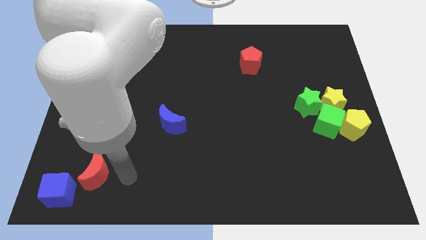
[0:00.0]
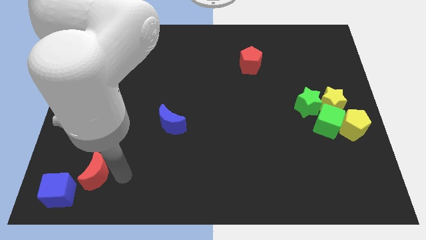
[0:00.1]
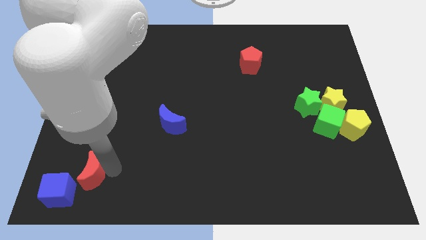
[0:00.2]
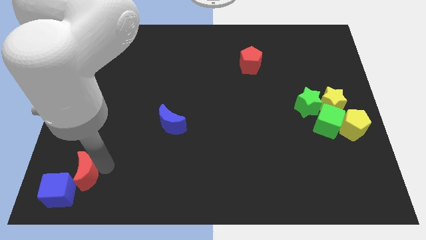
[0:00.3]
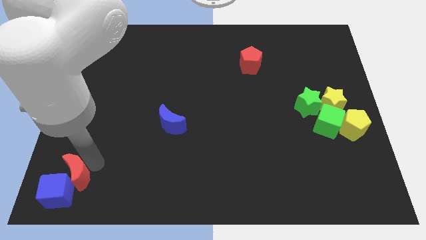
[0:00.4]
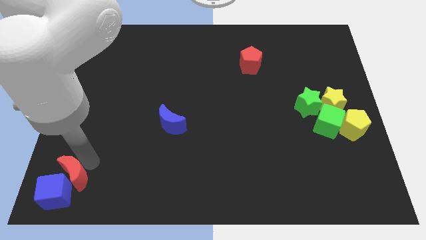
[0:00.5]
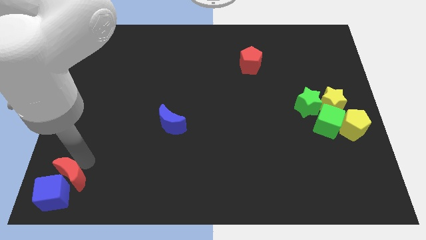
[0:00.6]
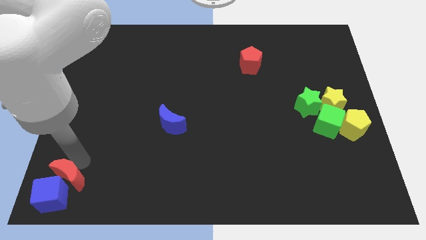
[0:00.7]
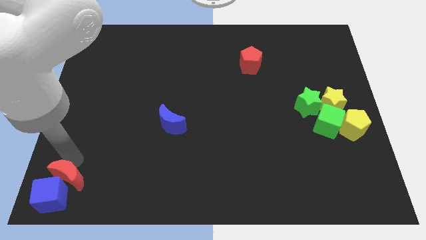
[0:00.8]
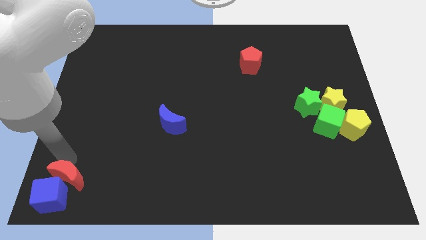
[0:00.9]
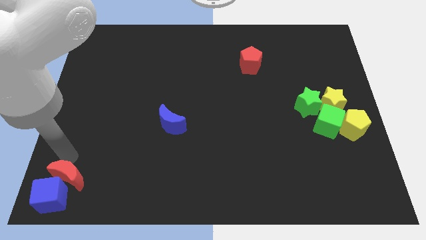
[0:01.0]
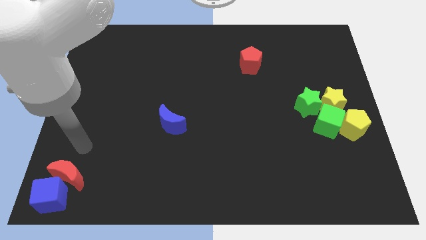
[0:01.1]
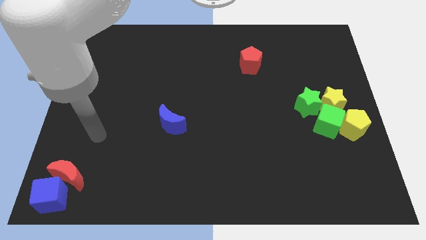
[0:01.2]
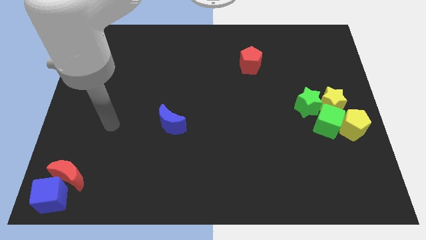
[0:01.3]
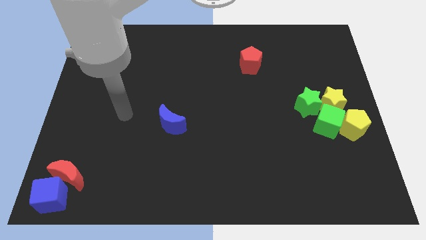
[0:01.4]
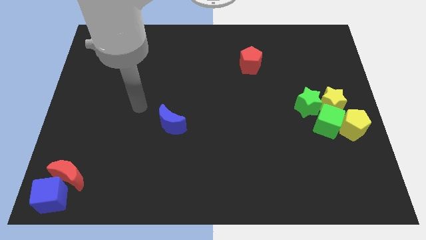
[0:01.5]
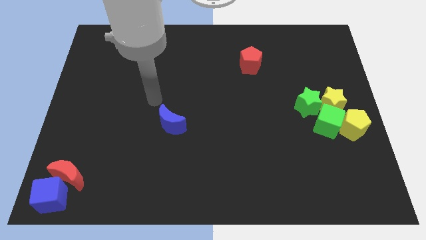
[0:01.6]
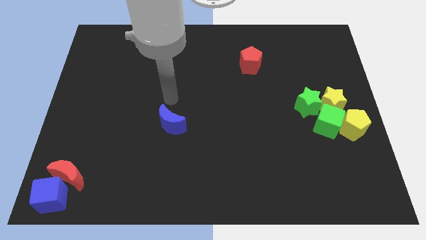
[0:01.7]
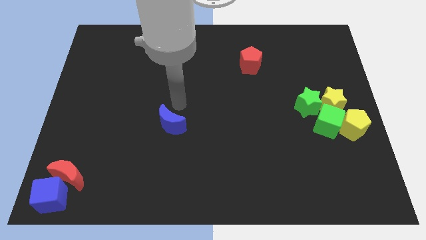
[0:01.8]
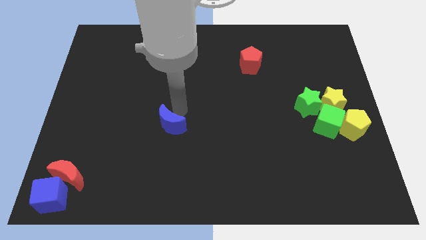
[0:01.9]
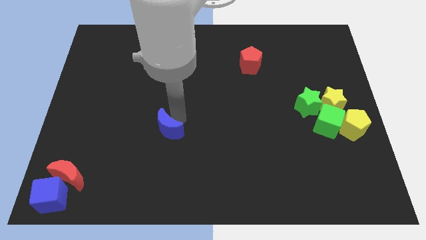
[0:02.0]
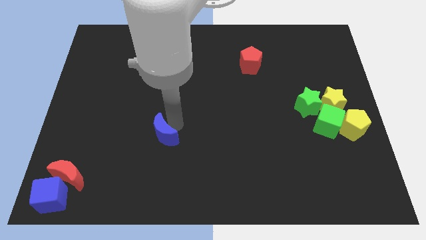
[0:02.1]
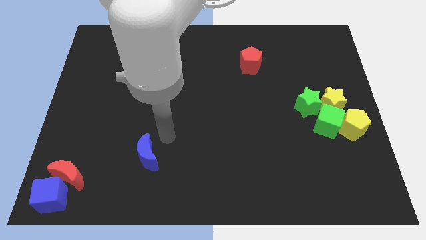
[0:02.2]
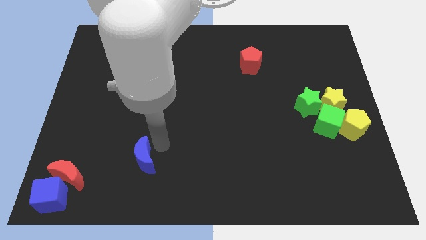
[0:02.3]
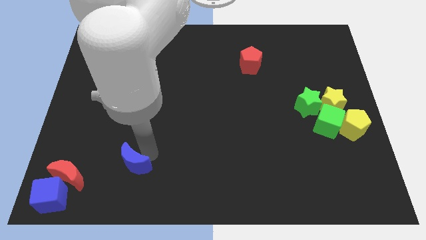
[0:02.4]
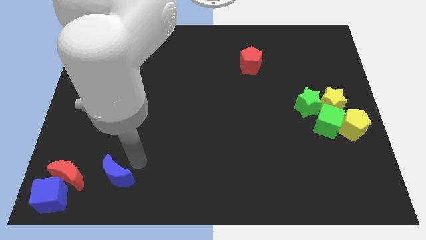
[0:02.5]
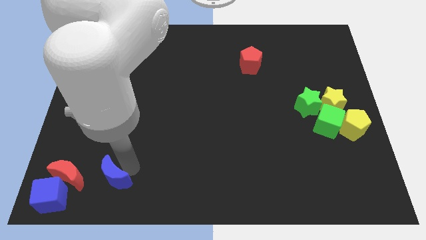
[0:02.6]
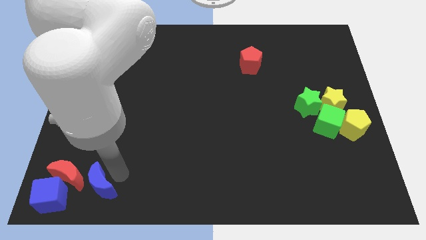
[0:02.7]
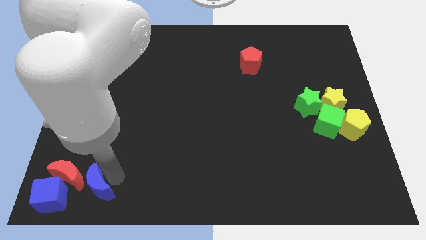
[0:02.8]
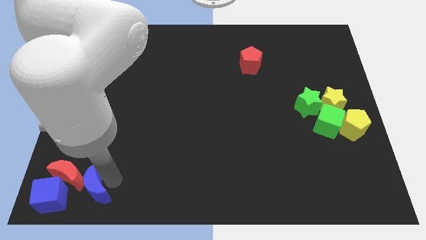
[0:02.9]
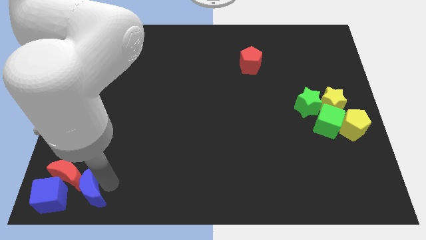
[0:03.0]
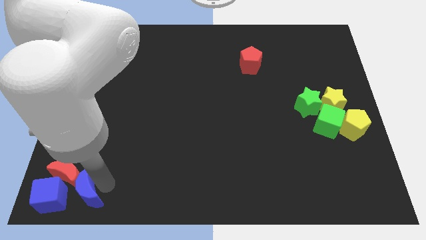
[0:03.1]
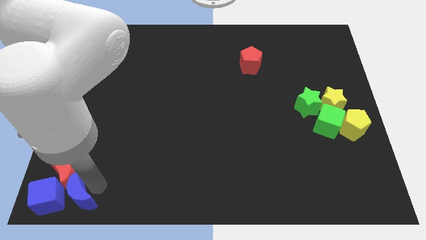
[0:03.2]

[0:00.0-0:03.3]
push the blue moon close to the blue cube

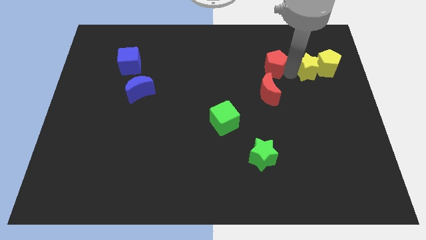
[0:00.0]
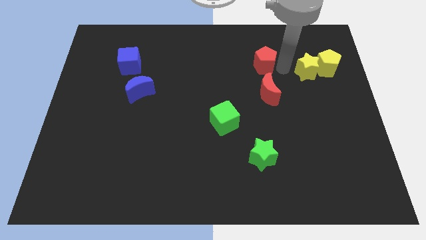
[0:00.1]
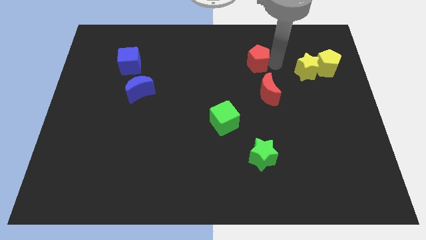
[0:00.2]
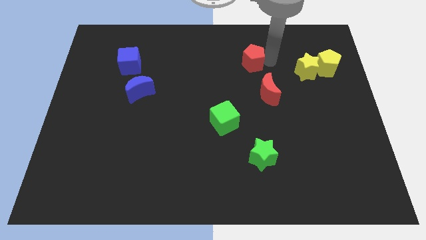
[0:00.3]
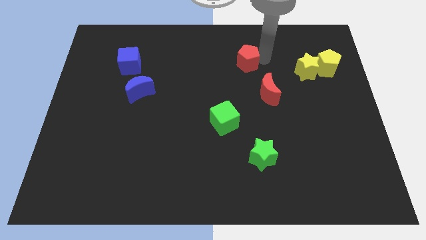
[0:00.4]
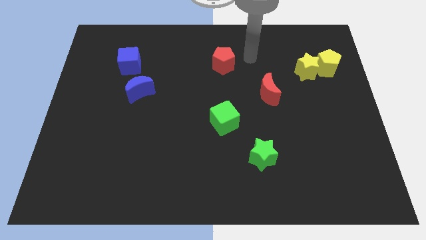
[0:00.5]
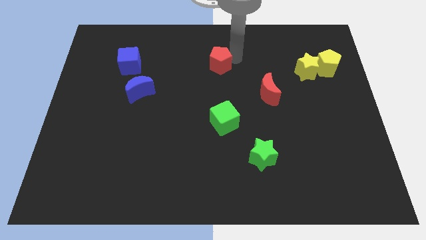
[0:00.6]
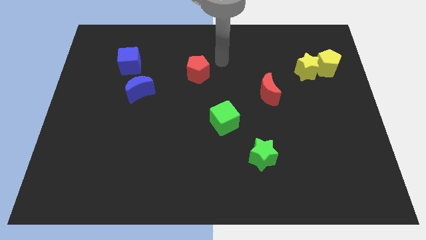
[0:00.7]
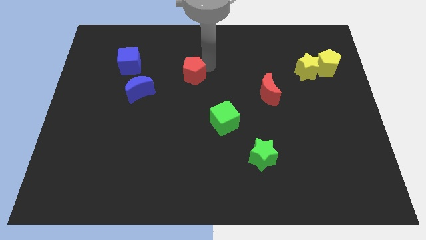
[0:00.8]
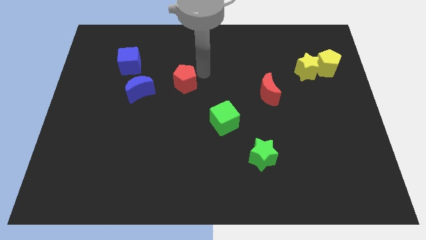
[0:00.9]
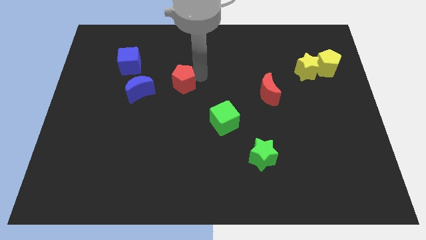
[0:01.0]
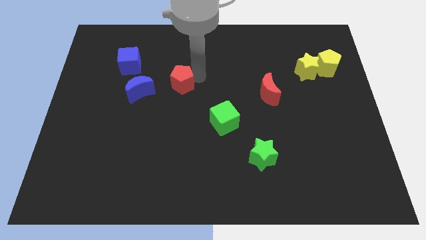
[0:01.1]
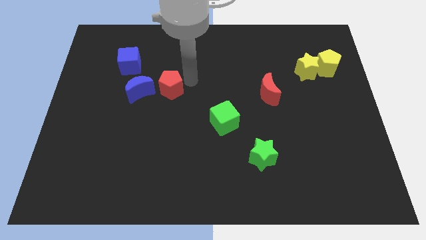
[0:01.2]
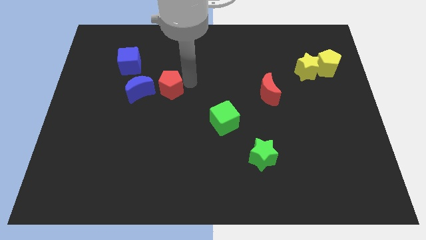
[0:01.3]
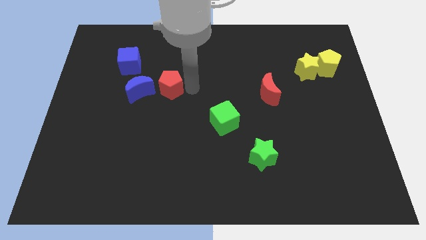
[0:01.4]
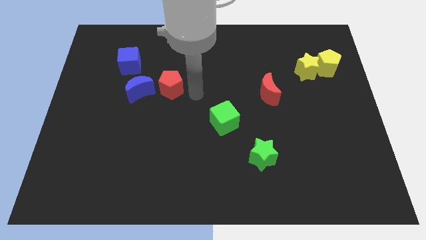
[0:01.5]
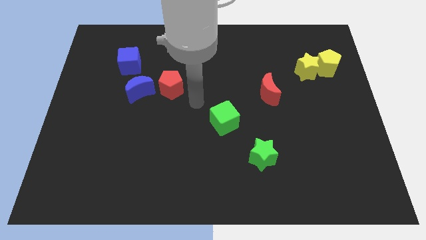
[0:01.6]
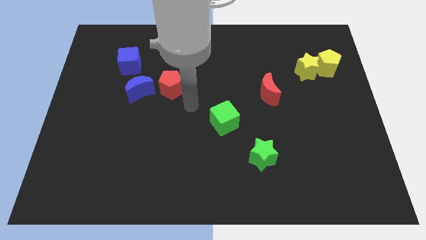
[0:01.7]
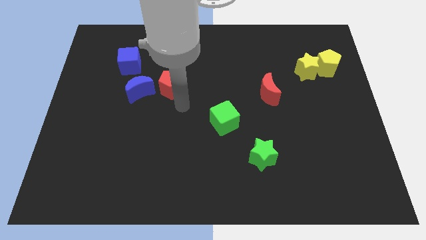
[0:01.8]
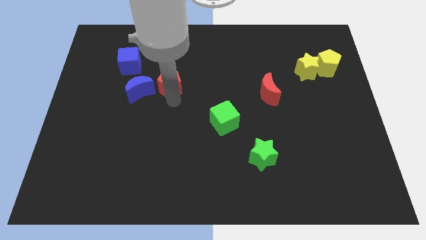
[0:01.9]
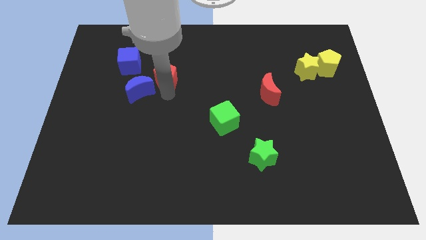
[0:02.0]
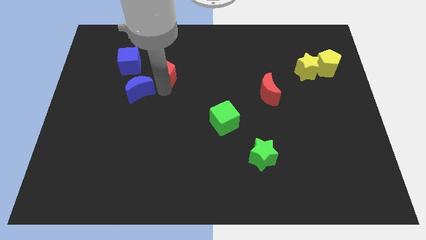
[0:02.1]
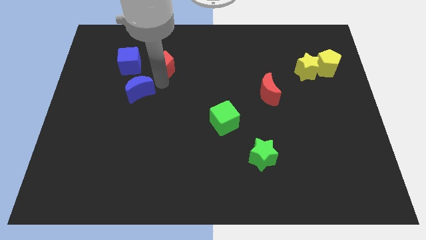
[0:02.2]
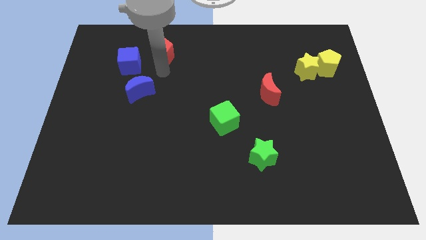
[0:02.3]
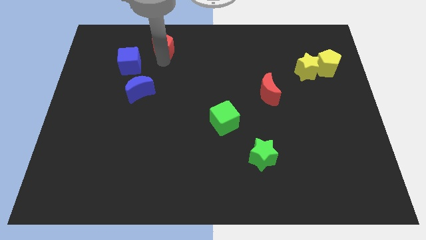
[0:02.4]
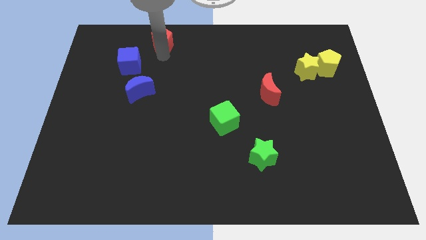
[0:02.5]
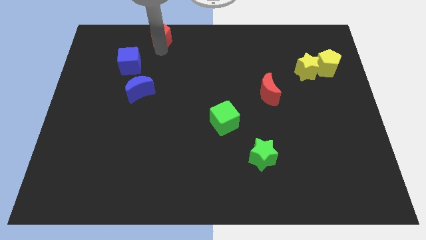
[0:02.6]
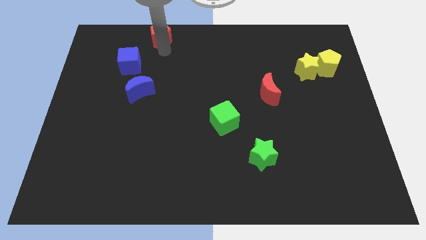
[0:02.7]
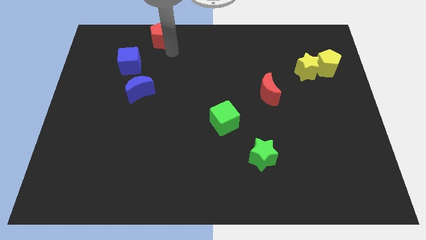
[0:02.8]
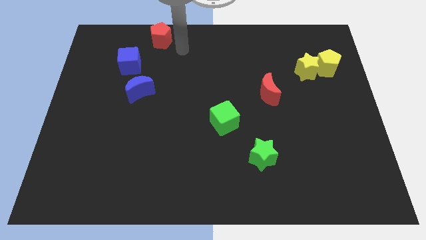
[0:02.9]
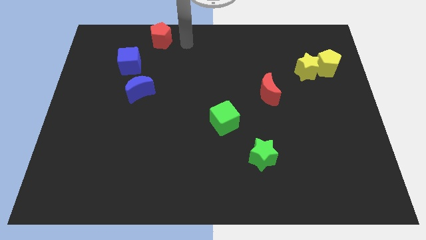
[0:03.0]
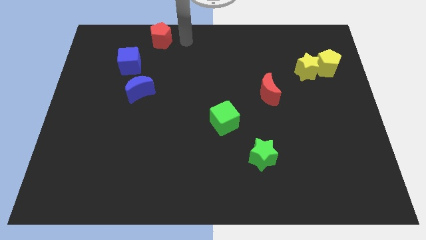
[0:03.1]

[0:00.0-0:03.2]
drag the red pentagon diagonally on the top right side of the blue cube

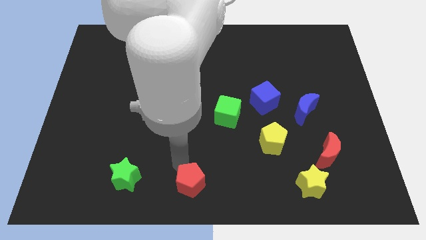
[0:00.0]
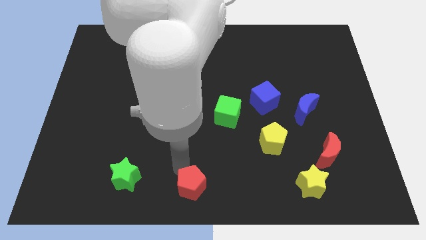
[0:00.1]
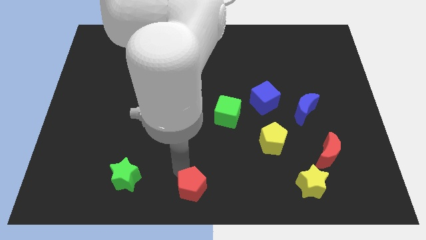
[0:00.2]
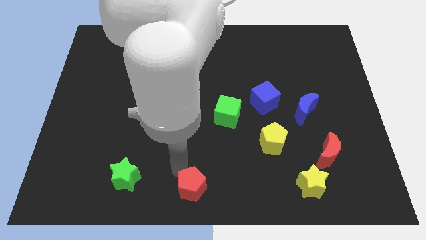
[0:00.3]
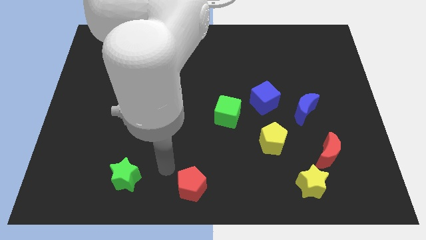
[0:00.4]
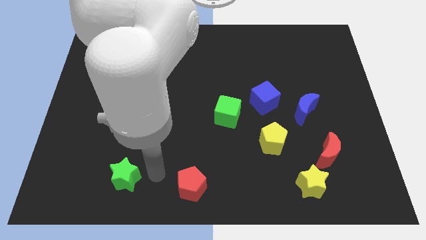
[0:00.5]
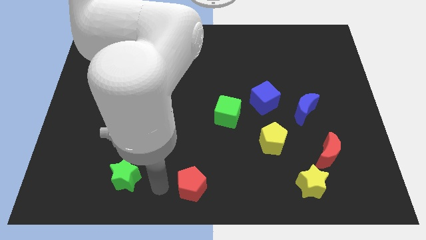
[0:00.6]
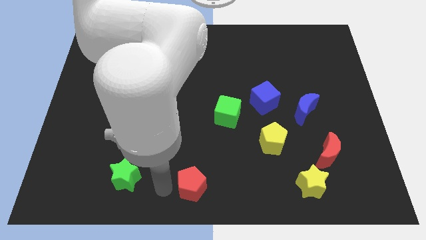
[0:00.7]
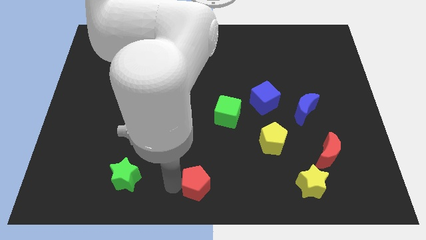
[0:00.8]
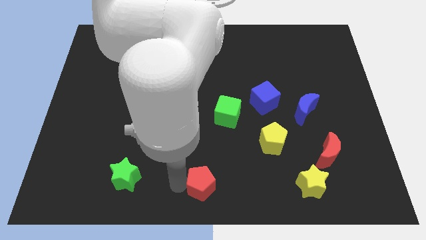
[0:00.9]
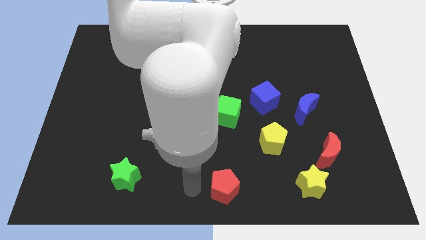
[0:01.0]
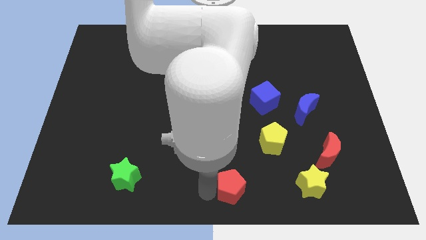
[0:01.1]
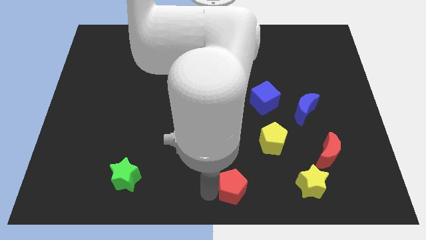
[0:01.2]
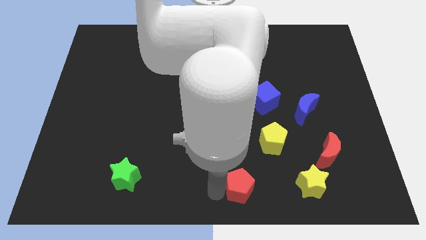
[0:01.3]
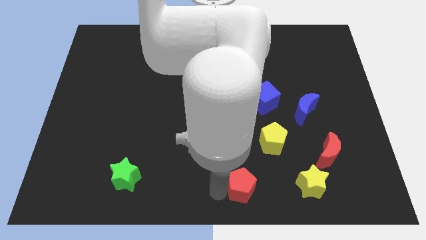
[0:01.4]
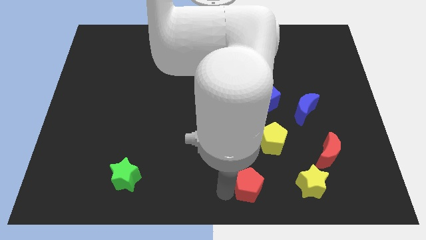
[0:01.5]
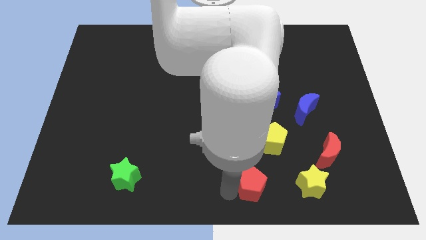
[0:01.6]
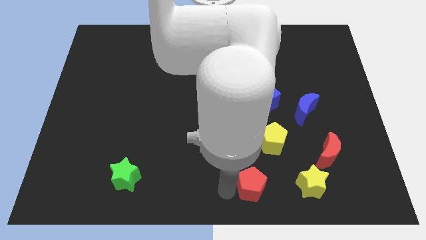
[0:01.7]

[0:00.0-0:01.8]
push the red pentagon towards the yellow star

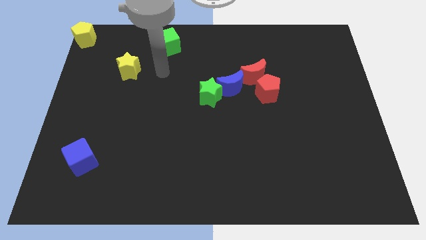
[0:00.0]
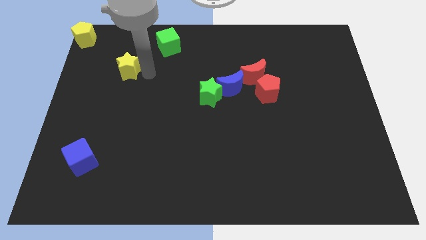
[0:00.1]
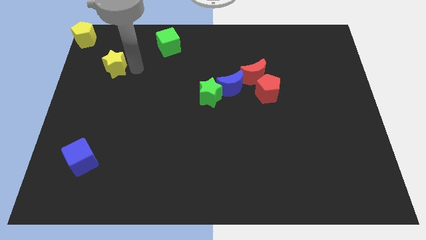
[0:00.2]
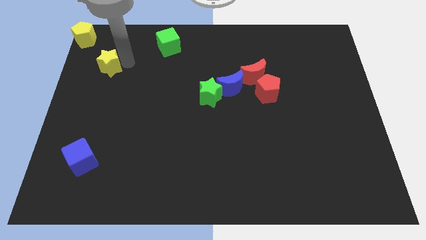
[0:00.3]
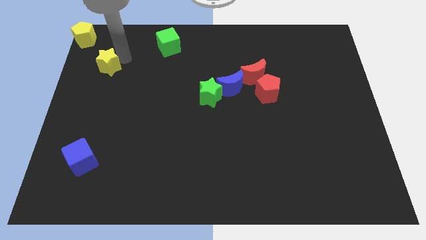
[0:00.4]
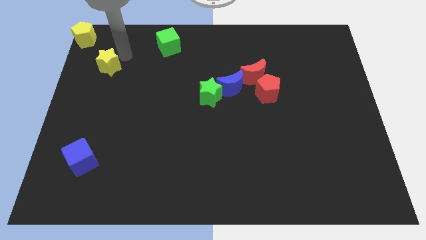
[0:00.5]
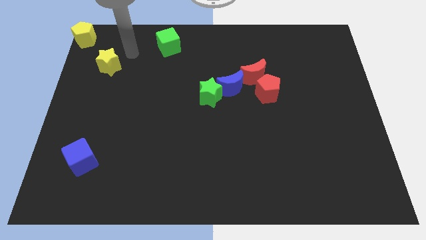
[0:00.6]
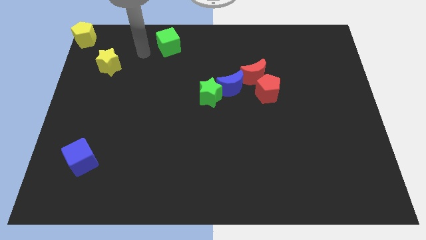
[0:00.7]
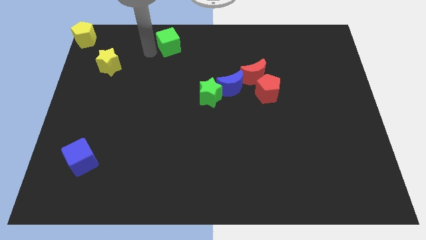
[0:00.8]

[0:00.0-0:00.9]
move the yellow star diagonally below the yellow pentagon
